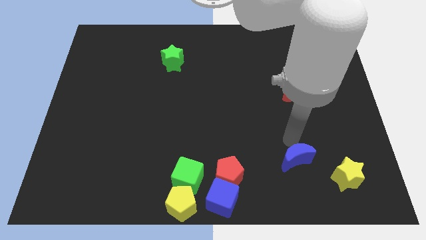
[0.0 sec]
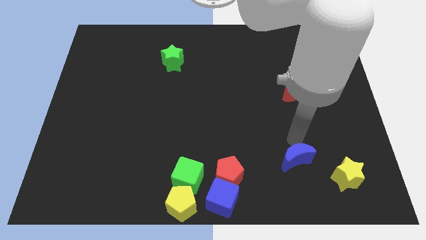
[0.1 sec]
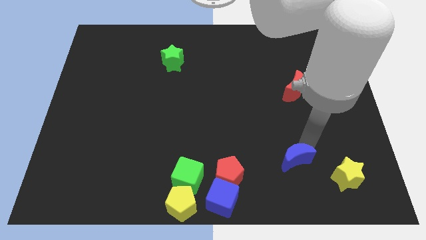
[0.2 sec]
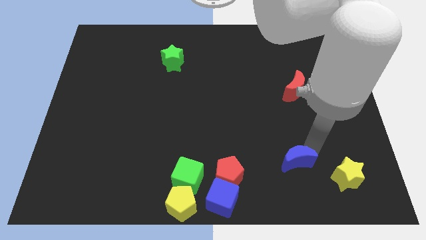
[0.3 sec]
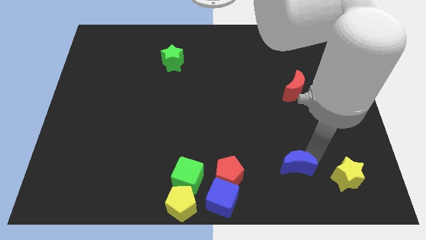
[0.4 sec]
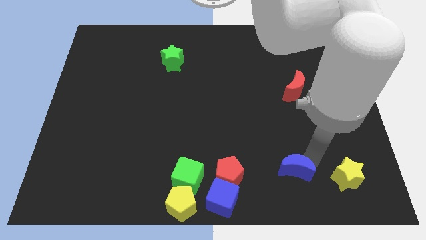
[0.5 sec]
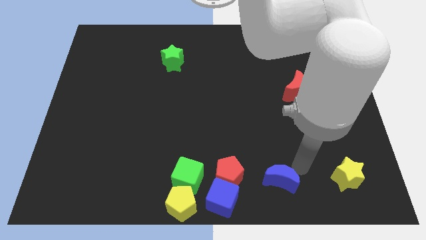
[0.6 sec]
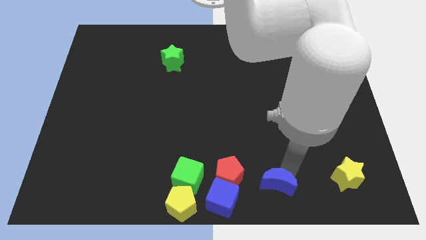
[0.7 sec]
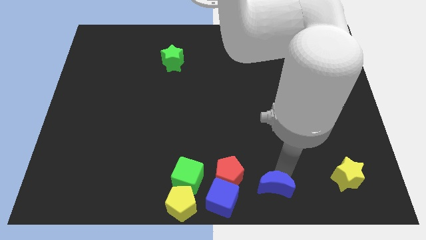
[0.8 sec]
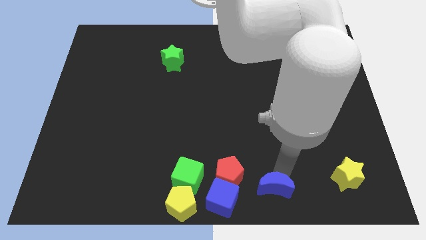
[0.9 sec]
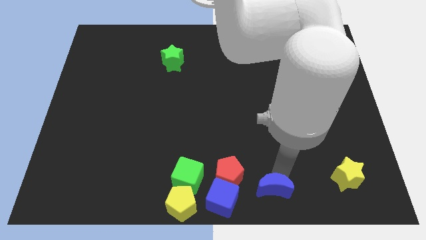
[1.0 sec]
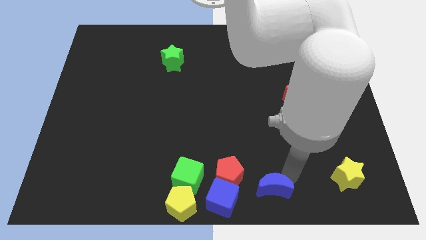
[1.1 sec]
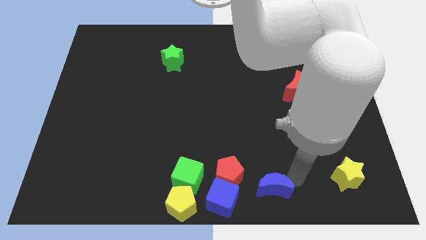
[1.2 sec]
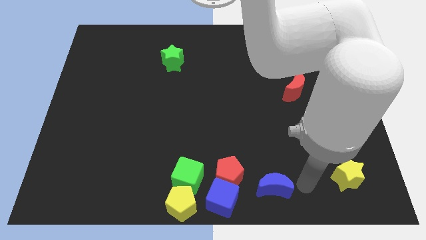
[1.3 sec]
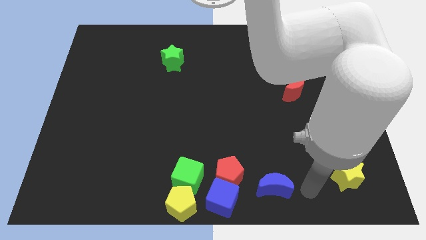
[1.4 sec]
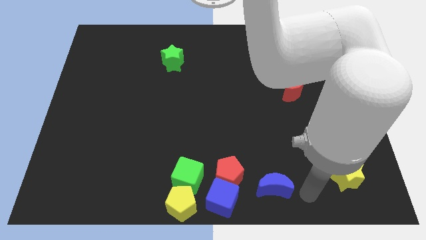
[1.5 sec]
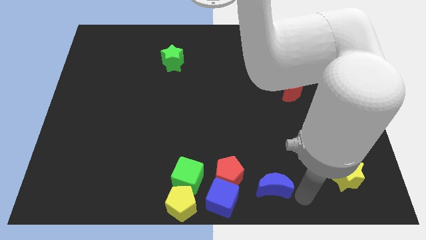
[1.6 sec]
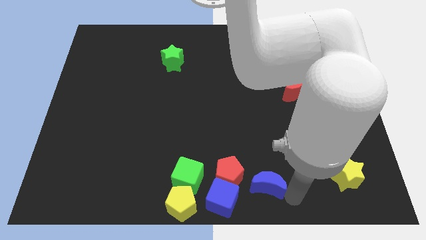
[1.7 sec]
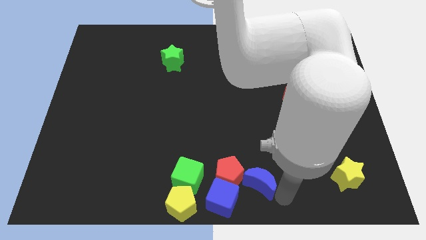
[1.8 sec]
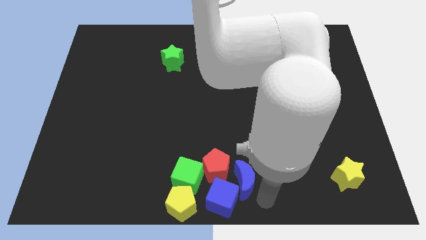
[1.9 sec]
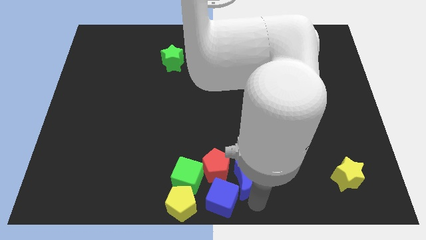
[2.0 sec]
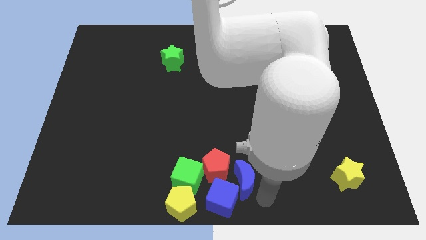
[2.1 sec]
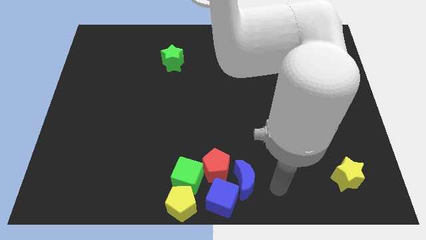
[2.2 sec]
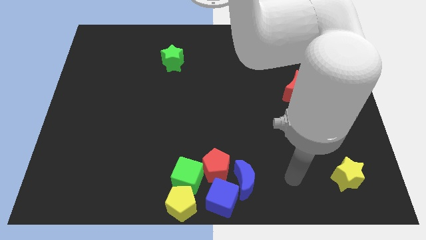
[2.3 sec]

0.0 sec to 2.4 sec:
push blue crescent towards red pentagon

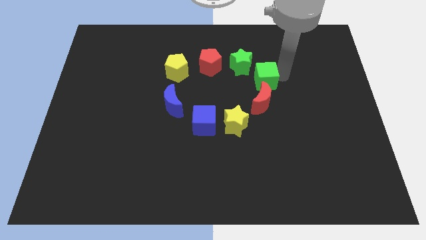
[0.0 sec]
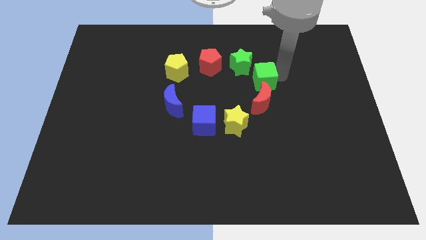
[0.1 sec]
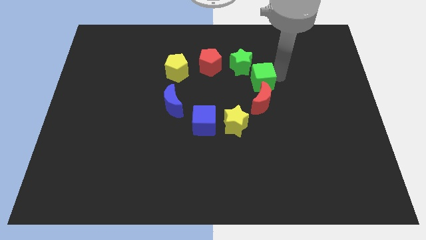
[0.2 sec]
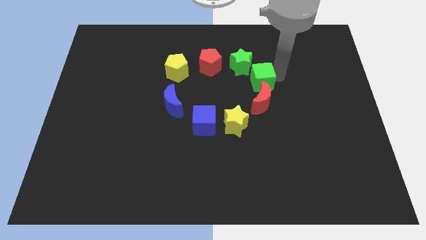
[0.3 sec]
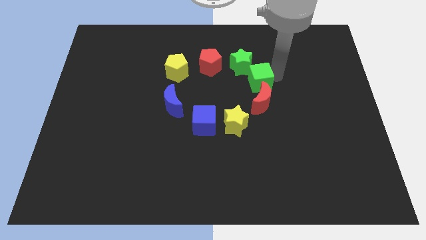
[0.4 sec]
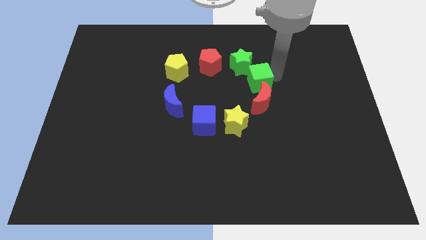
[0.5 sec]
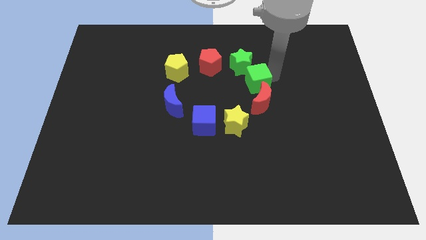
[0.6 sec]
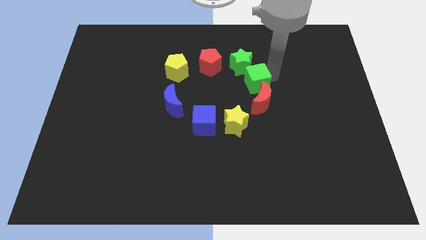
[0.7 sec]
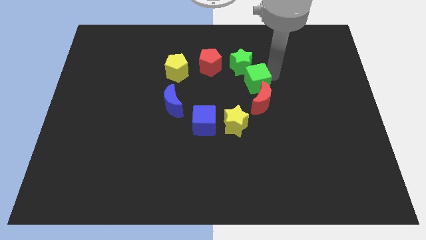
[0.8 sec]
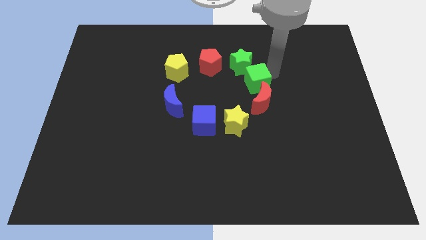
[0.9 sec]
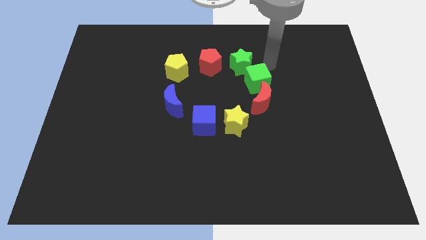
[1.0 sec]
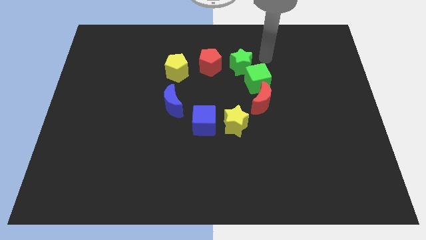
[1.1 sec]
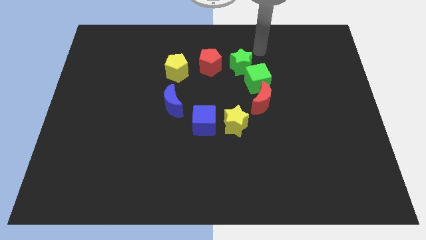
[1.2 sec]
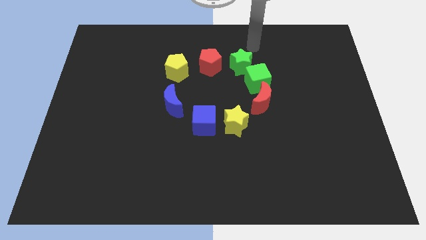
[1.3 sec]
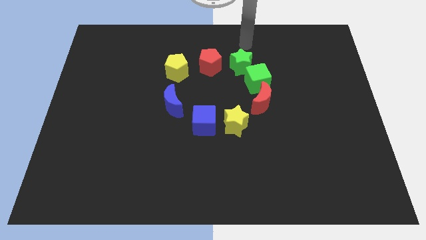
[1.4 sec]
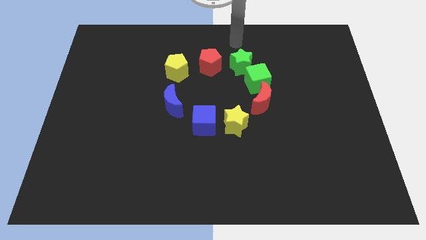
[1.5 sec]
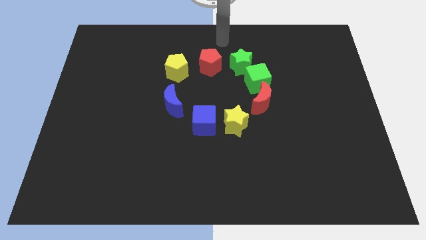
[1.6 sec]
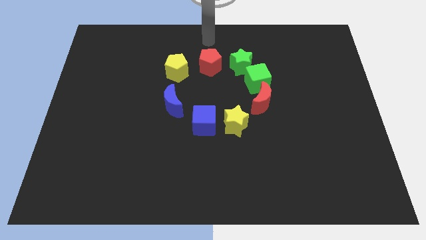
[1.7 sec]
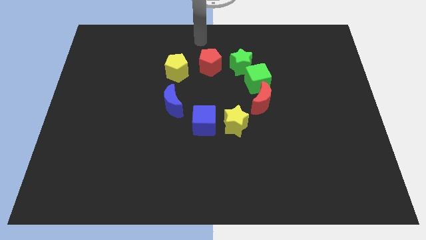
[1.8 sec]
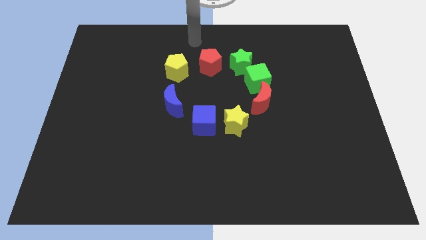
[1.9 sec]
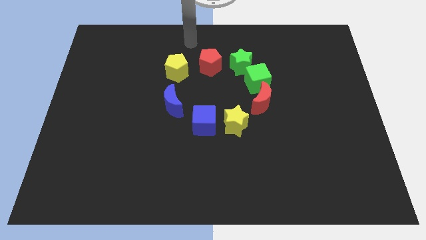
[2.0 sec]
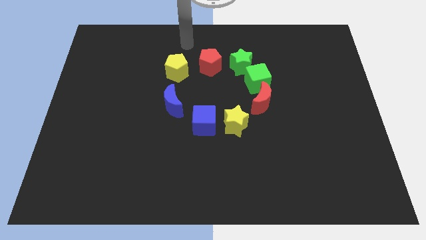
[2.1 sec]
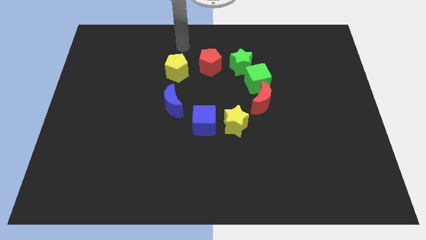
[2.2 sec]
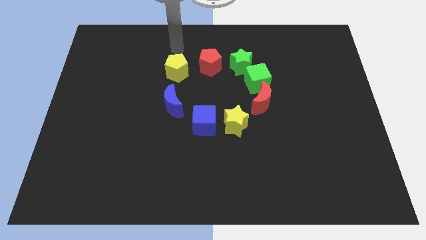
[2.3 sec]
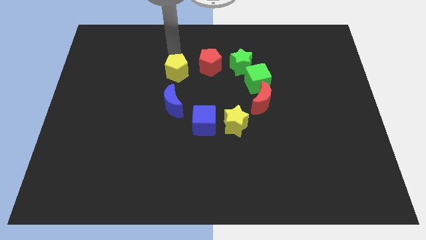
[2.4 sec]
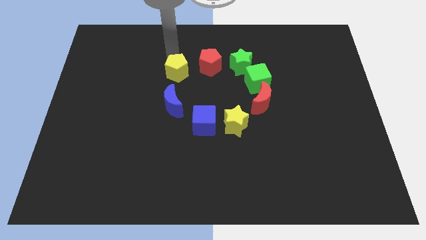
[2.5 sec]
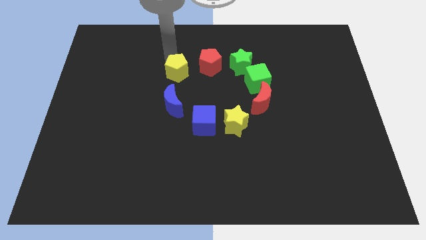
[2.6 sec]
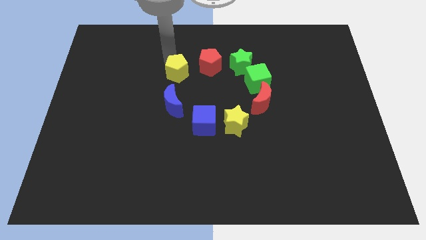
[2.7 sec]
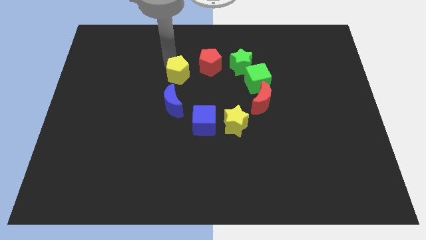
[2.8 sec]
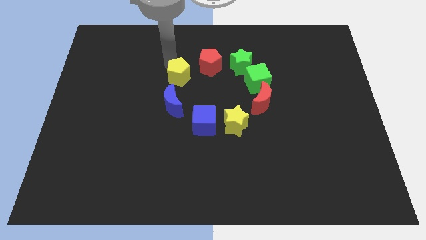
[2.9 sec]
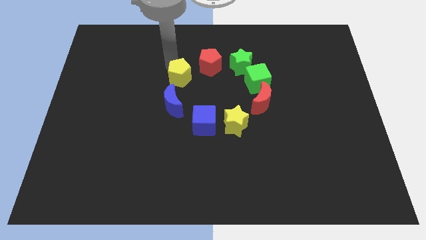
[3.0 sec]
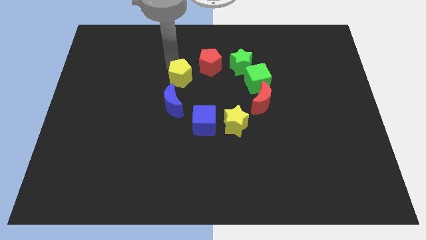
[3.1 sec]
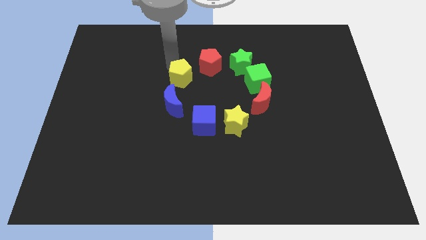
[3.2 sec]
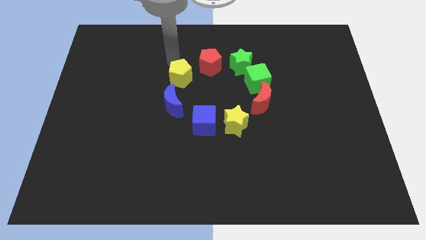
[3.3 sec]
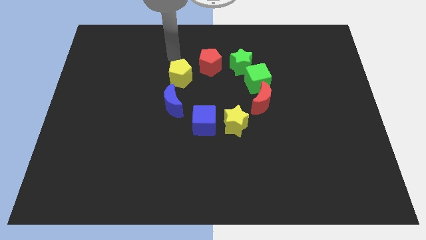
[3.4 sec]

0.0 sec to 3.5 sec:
place yourself above yellow pentagon

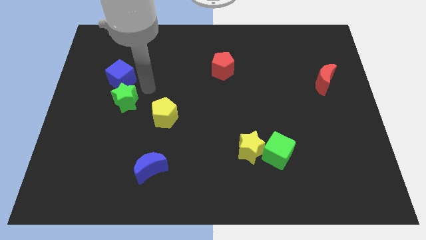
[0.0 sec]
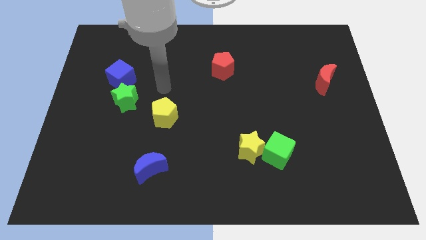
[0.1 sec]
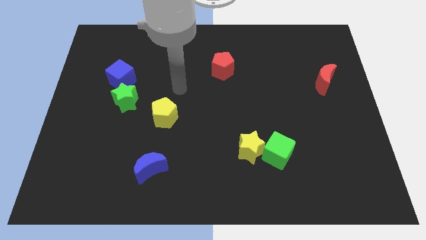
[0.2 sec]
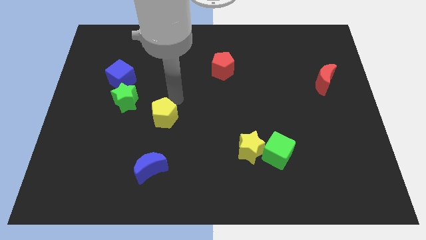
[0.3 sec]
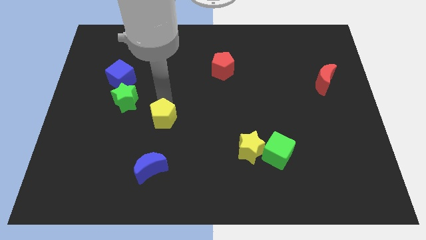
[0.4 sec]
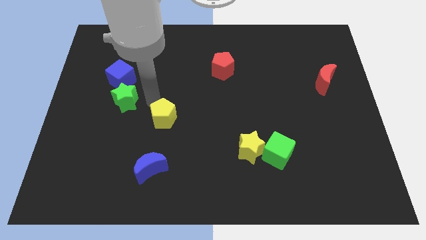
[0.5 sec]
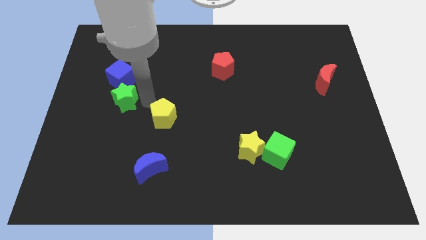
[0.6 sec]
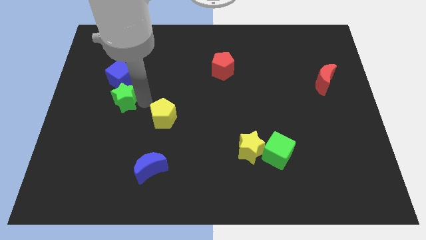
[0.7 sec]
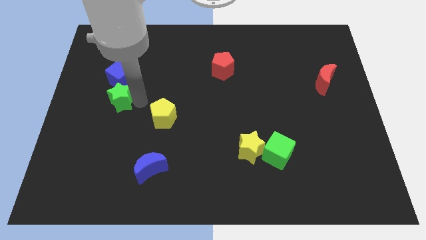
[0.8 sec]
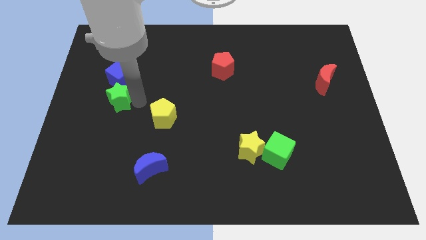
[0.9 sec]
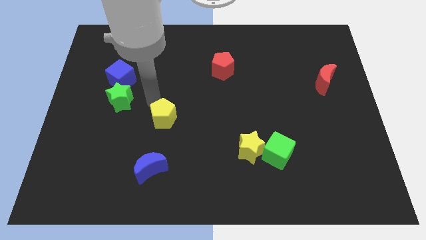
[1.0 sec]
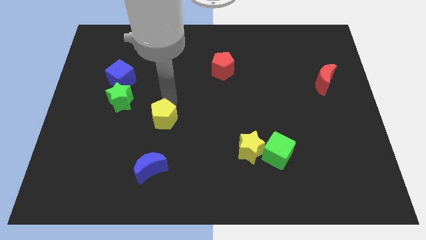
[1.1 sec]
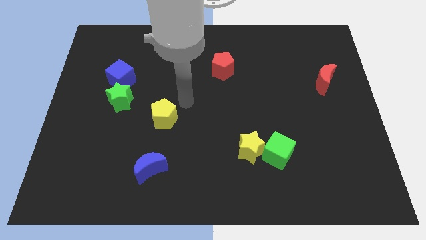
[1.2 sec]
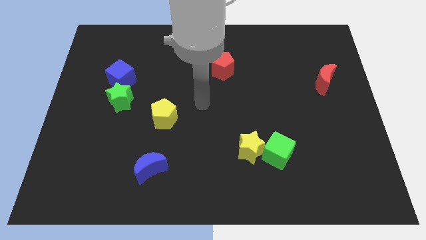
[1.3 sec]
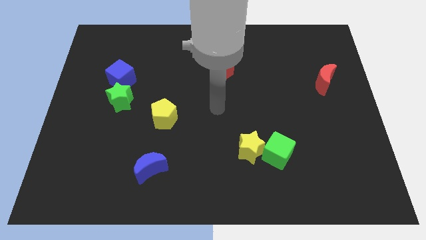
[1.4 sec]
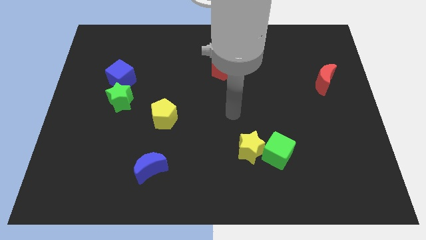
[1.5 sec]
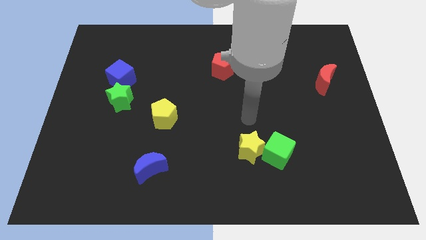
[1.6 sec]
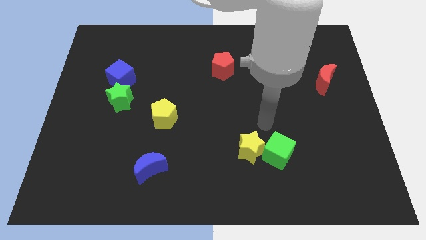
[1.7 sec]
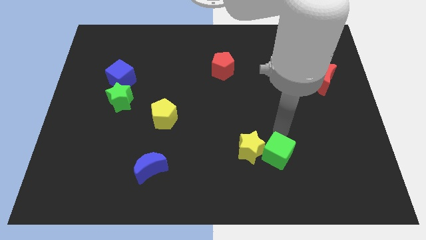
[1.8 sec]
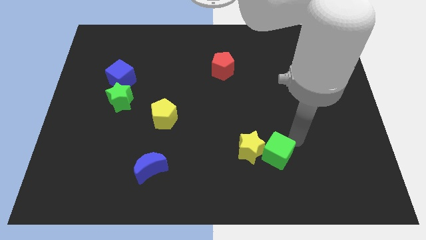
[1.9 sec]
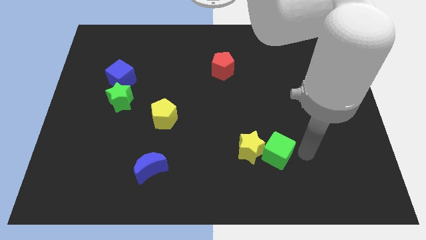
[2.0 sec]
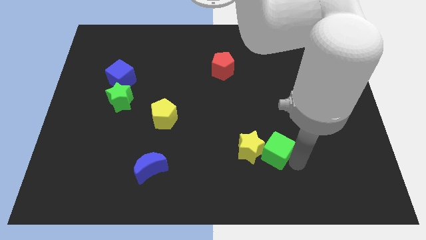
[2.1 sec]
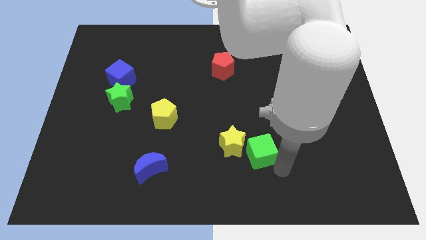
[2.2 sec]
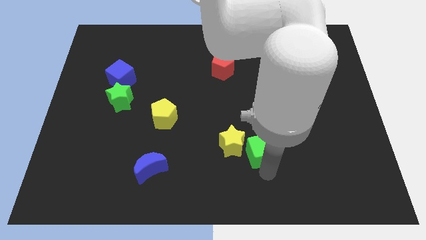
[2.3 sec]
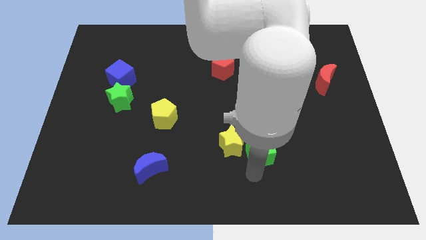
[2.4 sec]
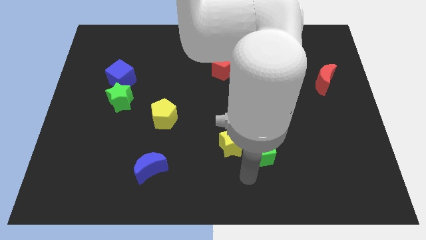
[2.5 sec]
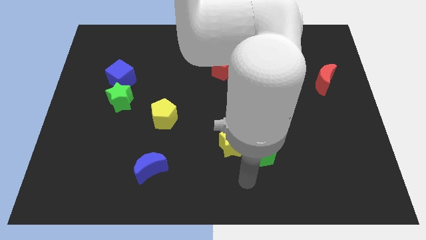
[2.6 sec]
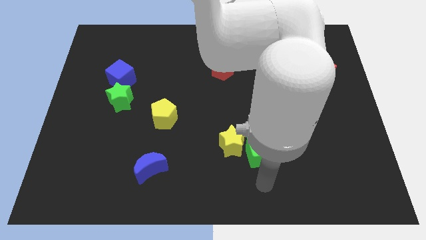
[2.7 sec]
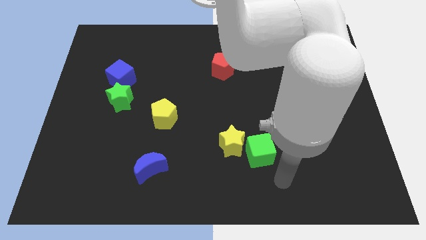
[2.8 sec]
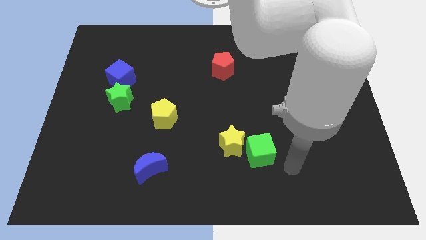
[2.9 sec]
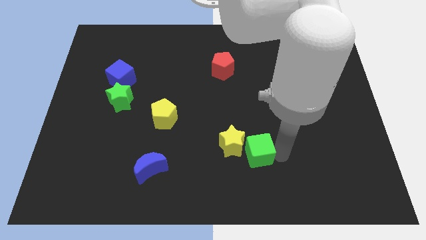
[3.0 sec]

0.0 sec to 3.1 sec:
slightly touch the yellow pentagon green cube
